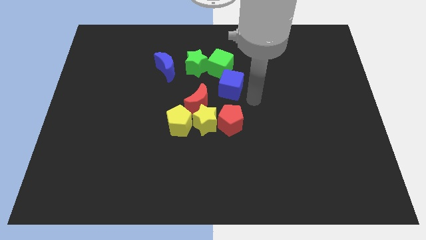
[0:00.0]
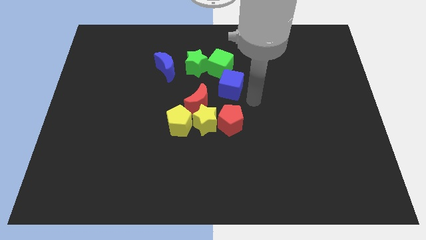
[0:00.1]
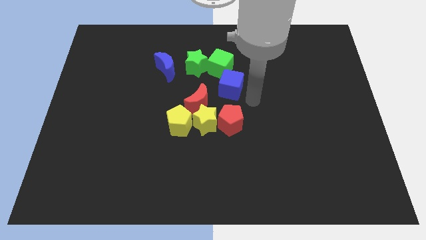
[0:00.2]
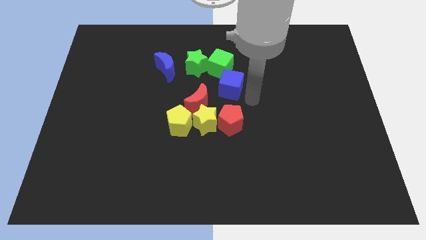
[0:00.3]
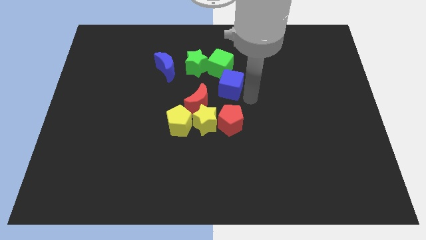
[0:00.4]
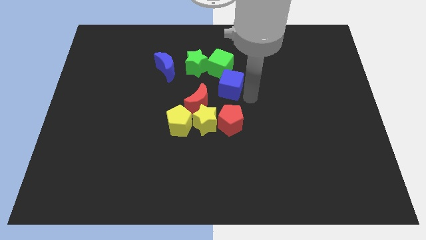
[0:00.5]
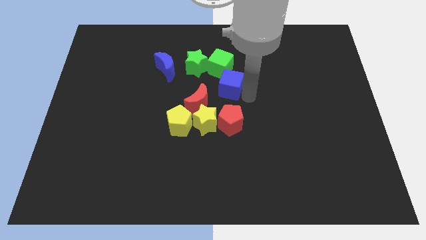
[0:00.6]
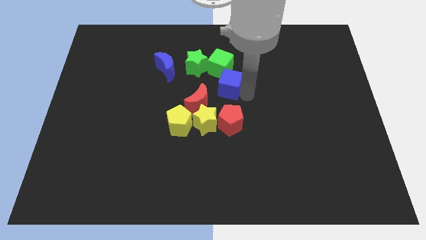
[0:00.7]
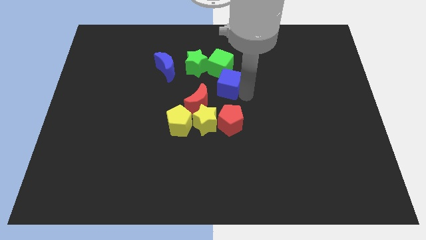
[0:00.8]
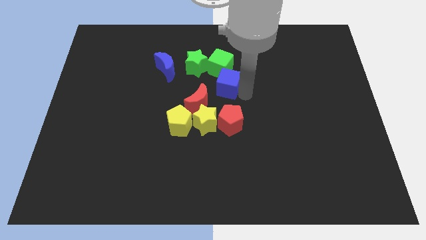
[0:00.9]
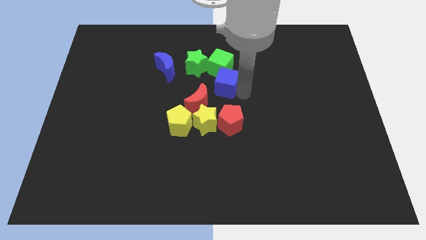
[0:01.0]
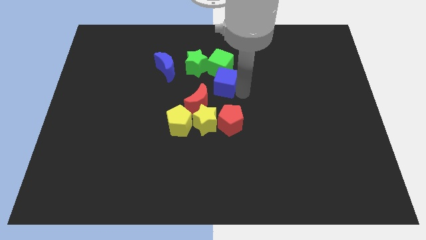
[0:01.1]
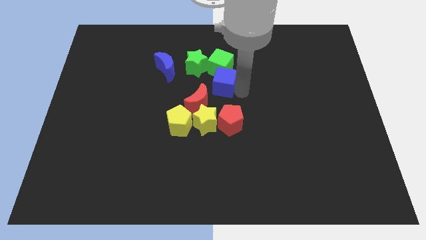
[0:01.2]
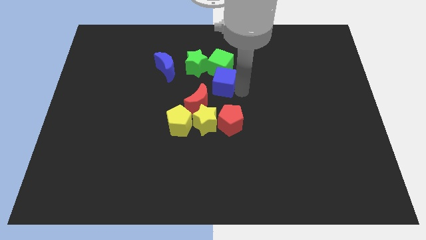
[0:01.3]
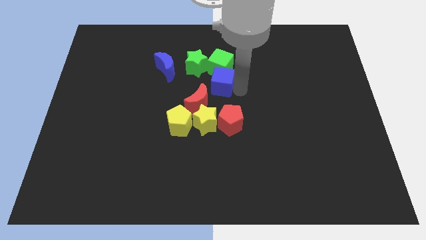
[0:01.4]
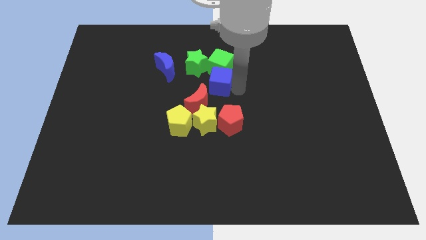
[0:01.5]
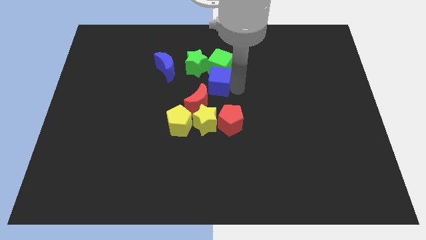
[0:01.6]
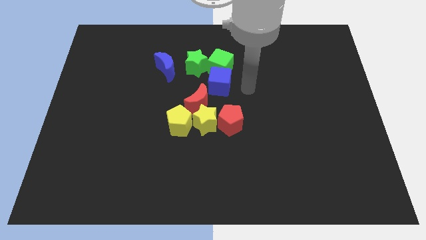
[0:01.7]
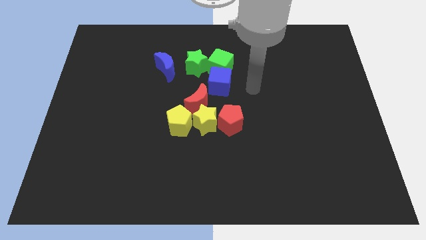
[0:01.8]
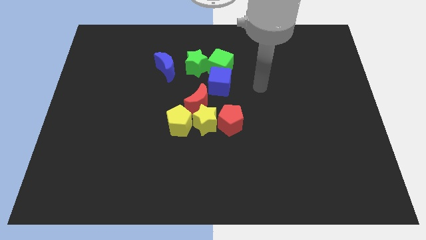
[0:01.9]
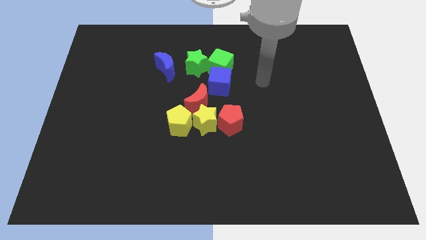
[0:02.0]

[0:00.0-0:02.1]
place the blue cube below the green cube

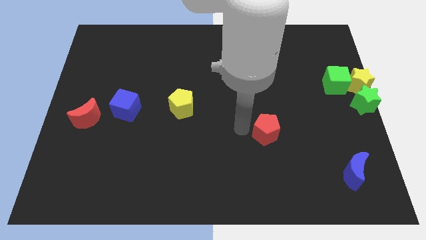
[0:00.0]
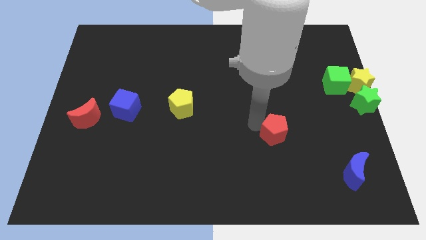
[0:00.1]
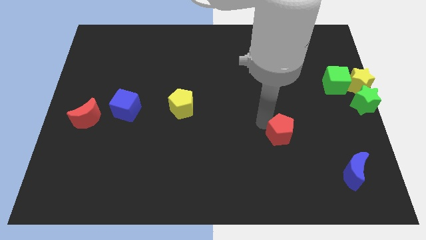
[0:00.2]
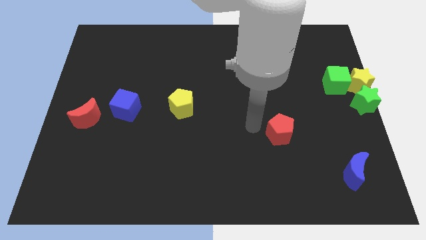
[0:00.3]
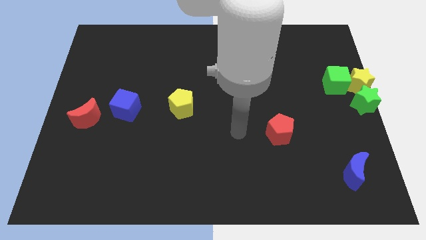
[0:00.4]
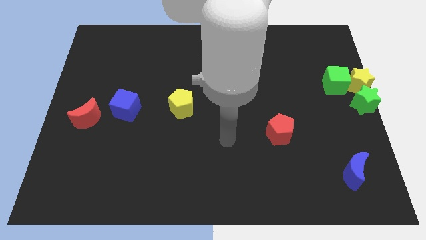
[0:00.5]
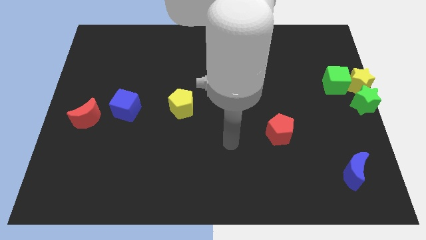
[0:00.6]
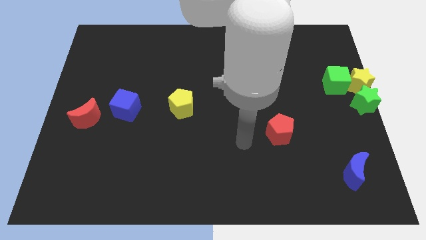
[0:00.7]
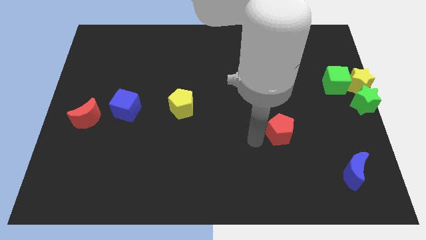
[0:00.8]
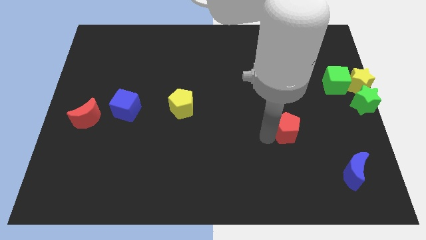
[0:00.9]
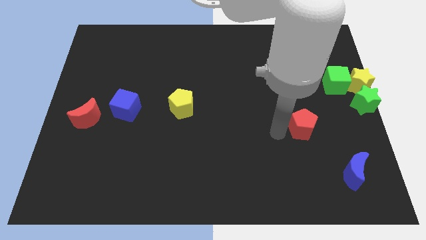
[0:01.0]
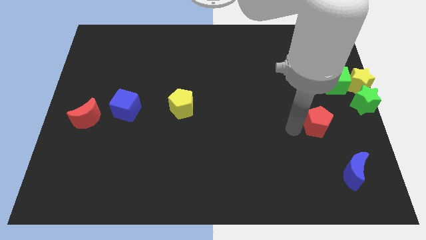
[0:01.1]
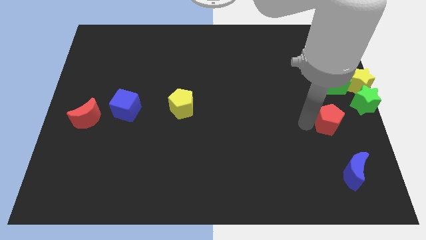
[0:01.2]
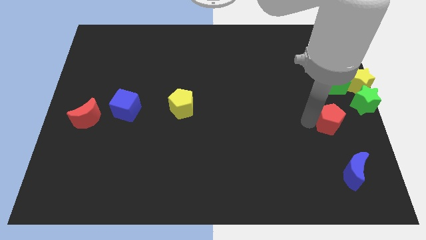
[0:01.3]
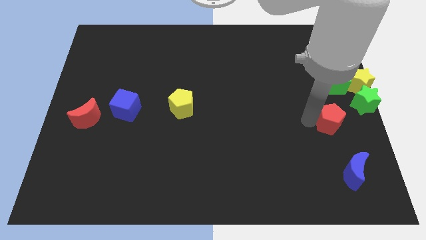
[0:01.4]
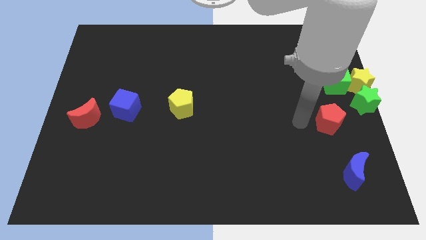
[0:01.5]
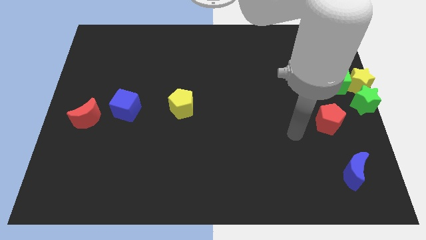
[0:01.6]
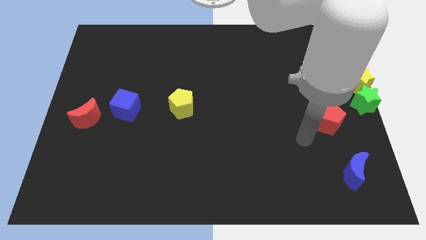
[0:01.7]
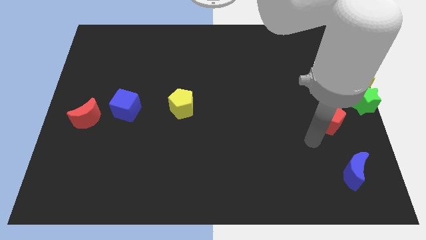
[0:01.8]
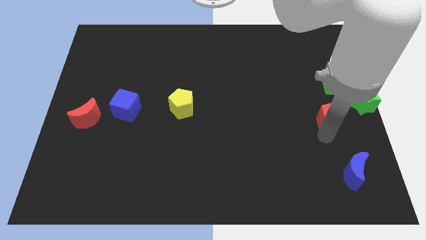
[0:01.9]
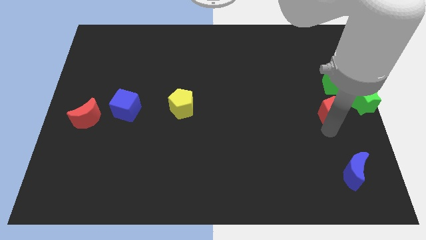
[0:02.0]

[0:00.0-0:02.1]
move the red pentagon to the right of the board

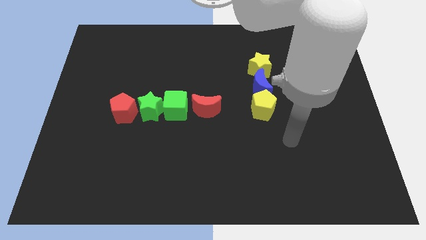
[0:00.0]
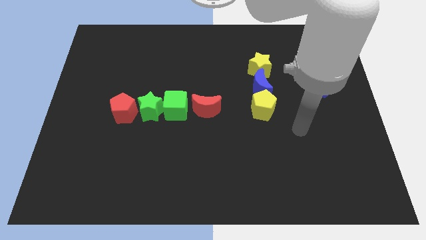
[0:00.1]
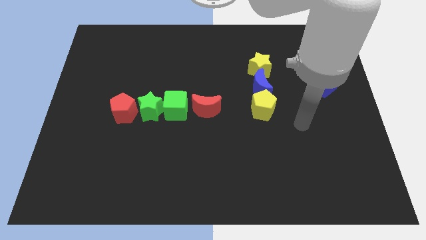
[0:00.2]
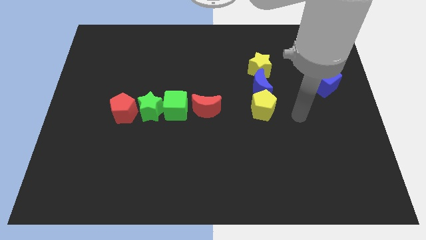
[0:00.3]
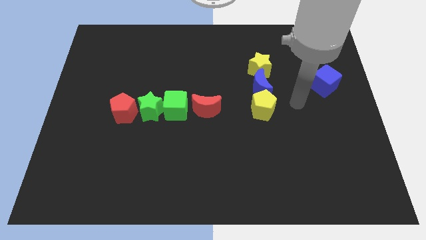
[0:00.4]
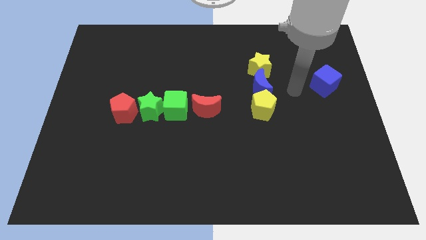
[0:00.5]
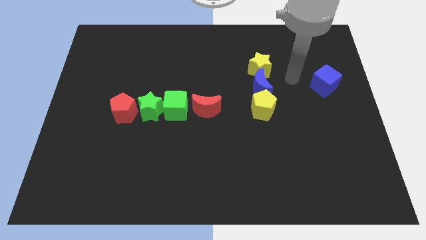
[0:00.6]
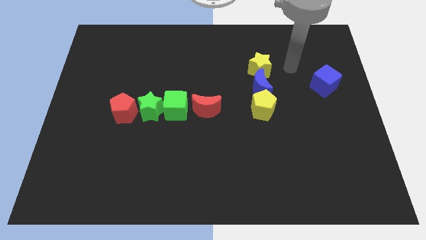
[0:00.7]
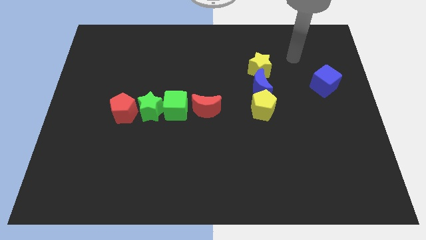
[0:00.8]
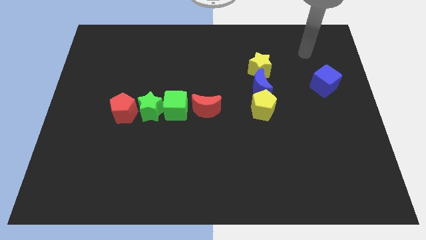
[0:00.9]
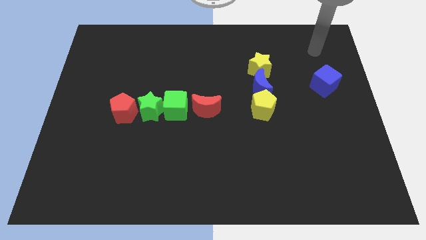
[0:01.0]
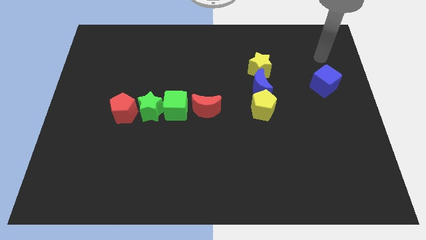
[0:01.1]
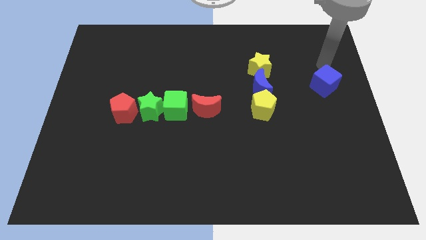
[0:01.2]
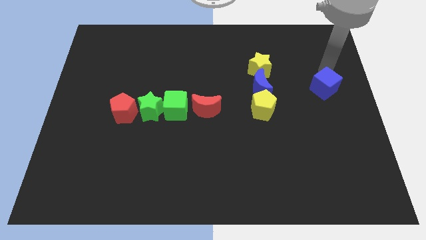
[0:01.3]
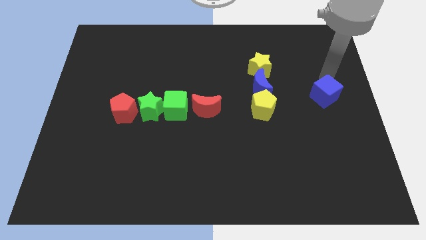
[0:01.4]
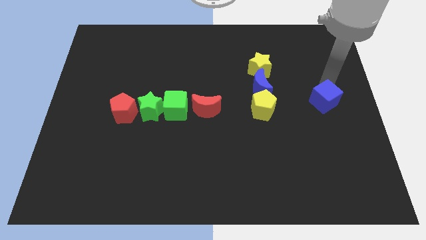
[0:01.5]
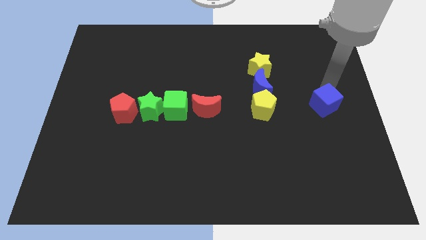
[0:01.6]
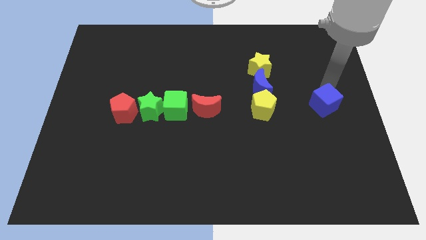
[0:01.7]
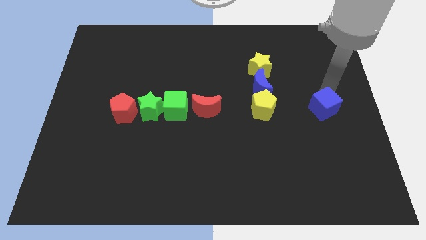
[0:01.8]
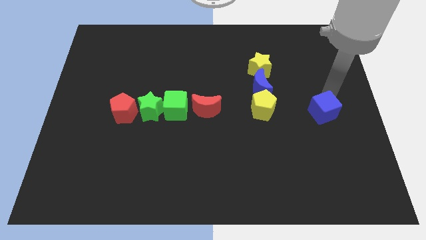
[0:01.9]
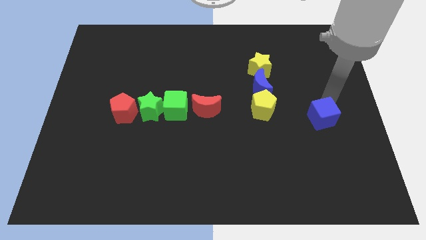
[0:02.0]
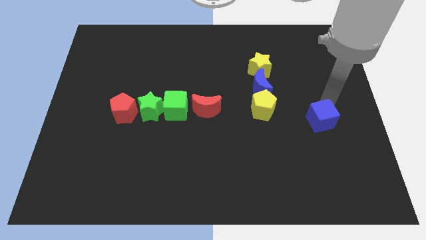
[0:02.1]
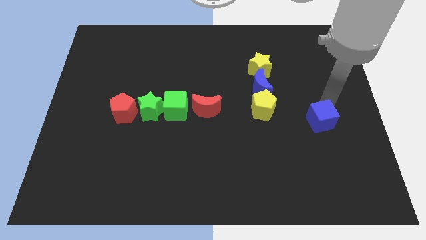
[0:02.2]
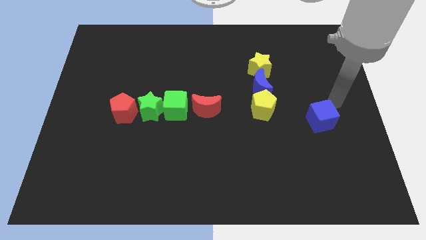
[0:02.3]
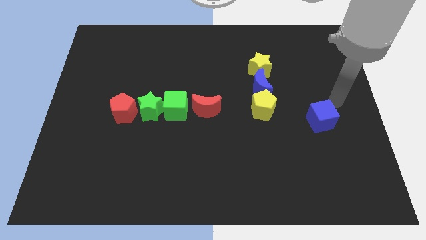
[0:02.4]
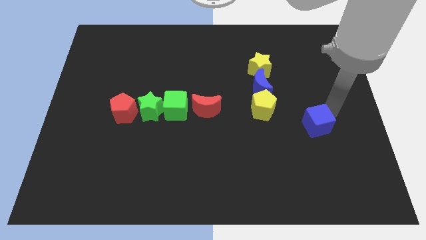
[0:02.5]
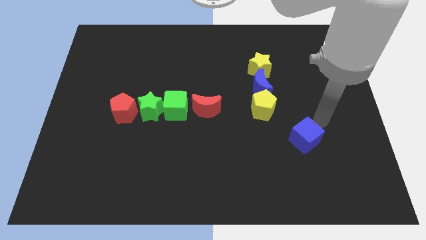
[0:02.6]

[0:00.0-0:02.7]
push blue cube slightly down

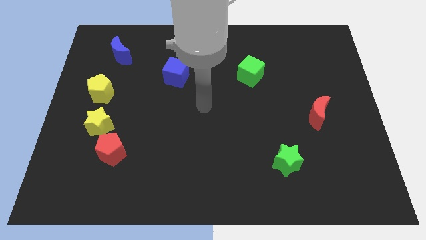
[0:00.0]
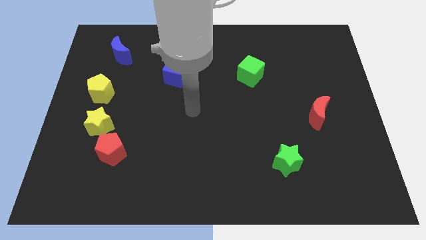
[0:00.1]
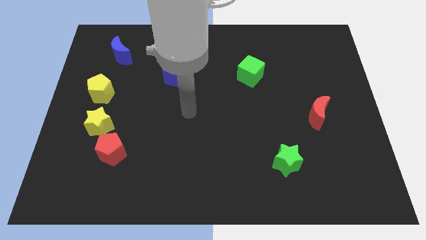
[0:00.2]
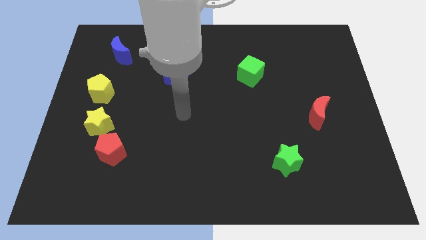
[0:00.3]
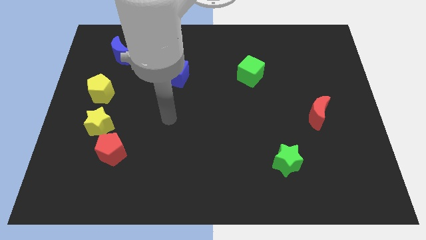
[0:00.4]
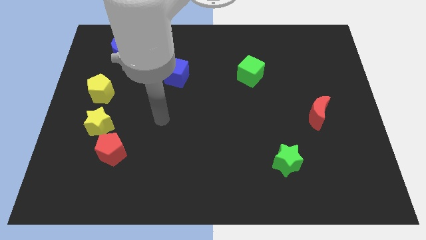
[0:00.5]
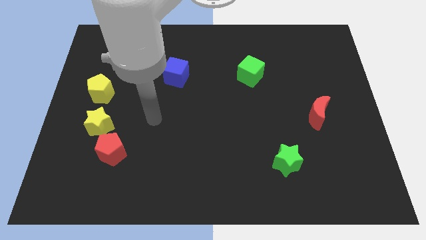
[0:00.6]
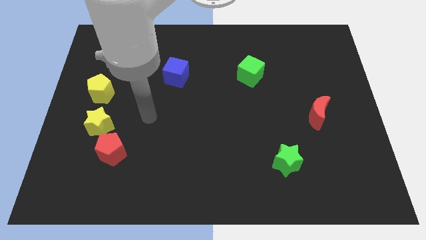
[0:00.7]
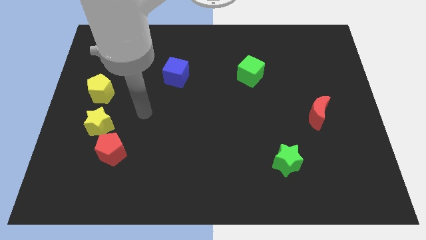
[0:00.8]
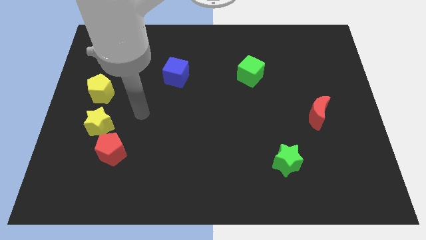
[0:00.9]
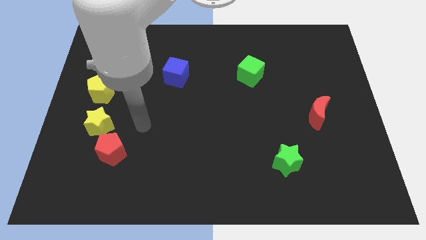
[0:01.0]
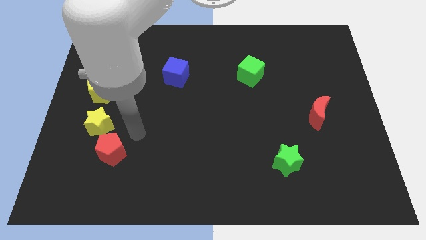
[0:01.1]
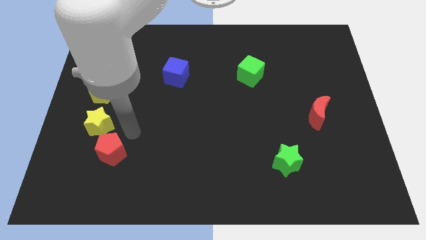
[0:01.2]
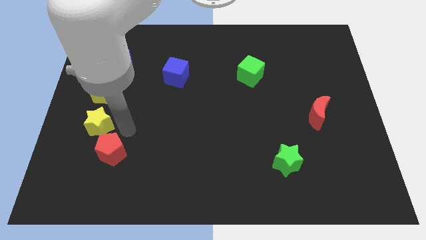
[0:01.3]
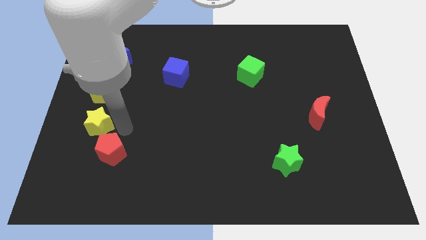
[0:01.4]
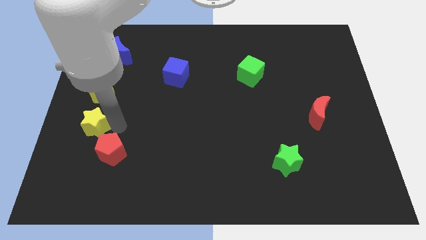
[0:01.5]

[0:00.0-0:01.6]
tap the right side of the yellow star

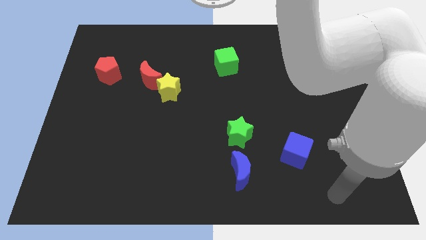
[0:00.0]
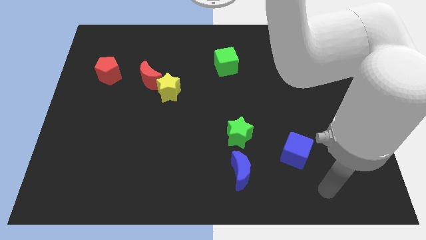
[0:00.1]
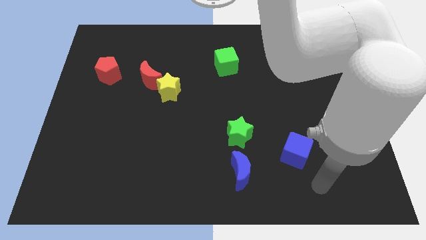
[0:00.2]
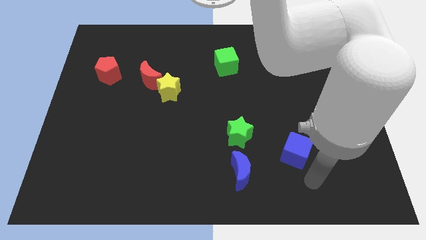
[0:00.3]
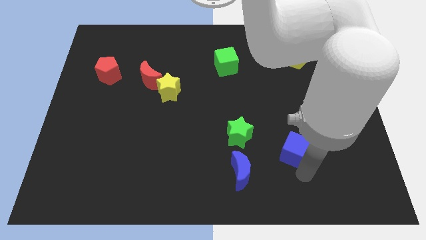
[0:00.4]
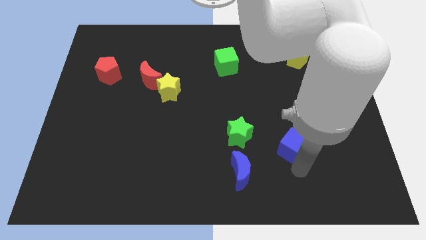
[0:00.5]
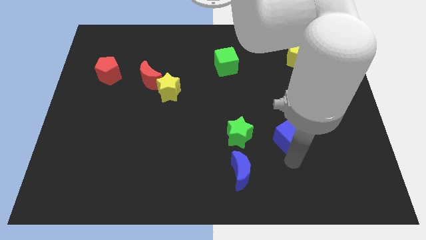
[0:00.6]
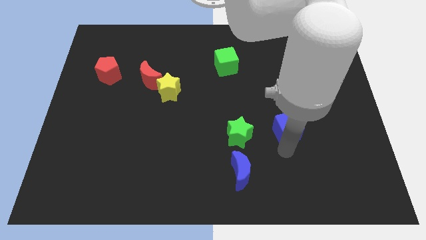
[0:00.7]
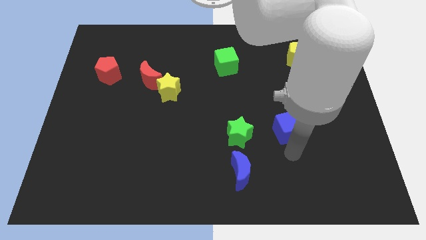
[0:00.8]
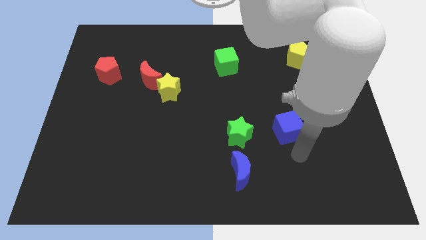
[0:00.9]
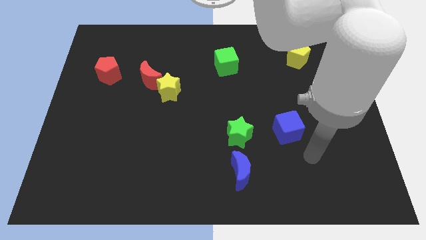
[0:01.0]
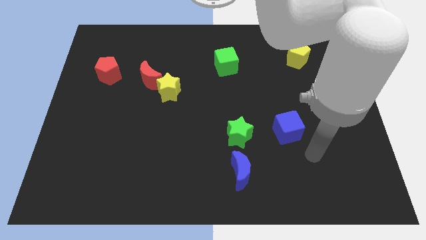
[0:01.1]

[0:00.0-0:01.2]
slide the blue cube slightly towards up
